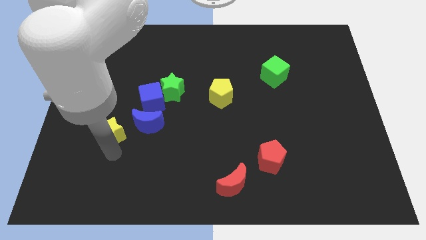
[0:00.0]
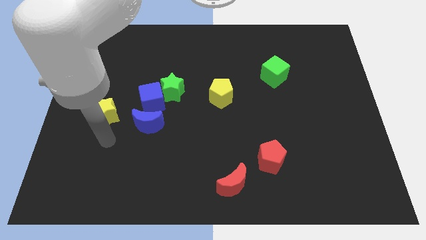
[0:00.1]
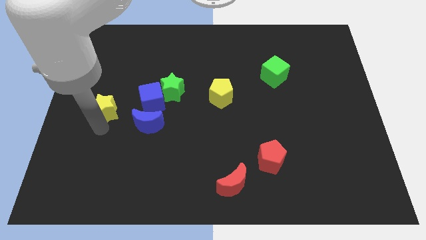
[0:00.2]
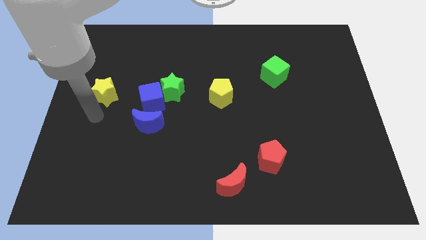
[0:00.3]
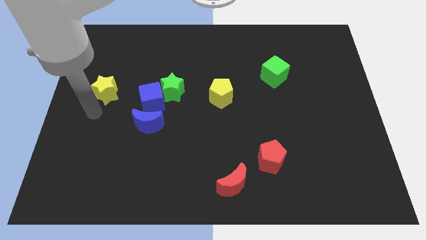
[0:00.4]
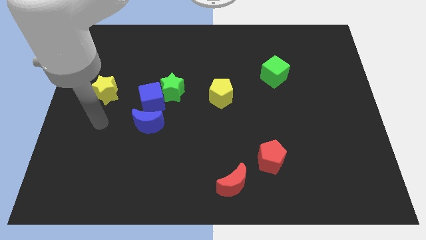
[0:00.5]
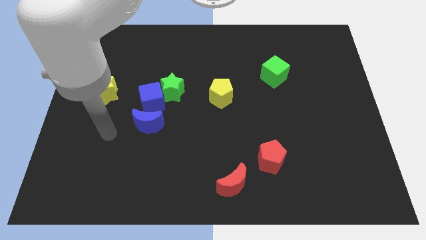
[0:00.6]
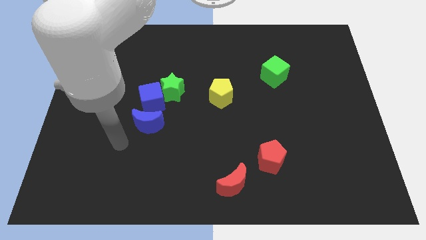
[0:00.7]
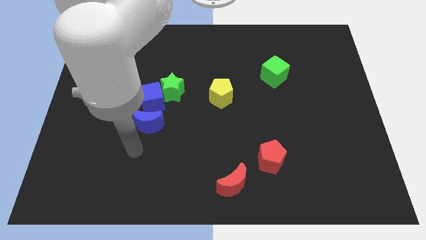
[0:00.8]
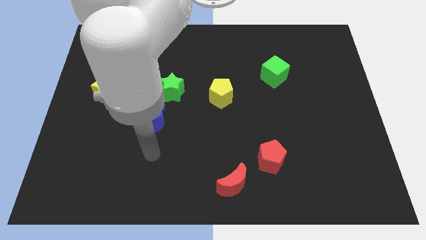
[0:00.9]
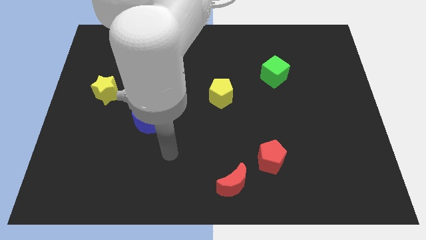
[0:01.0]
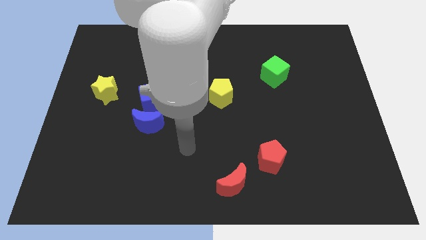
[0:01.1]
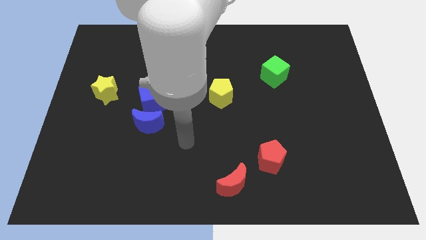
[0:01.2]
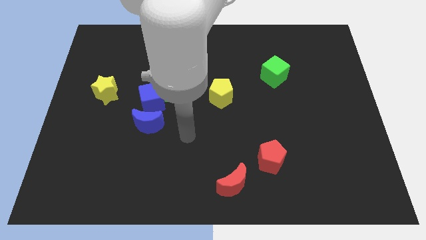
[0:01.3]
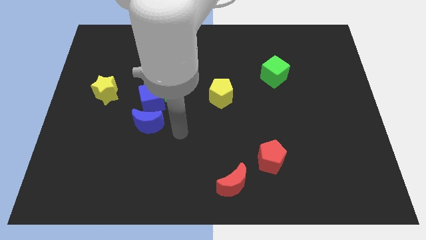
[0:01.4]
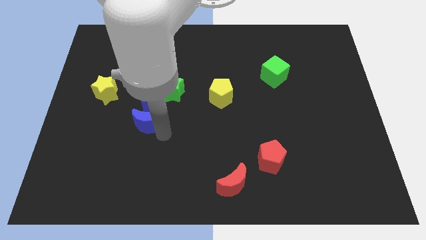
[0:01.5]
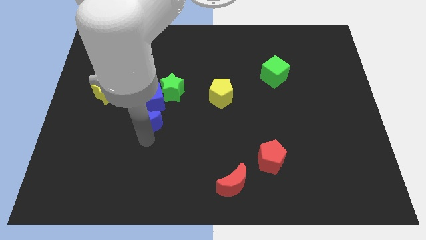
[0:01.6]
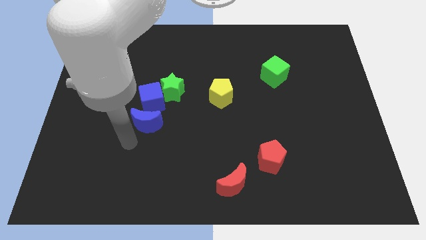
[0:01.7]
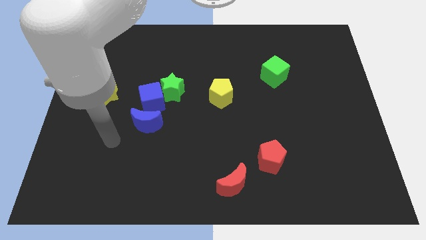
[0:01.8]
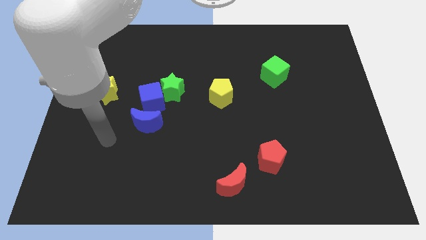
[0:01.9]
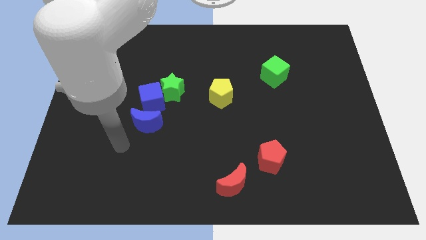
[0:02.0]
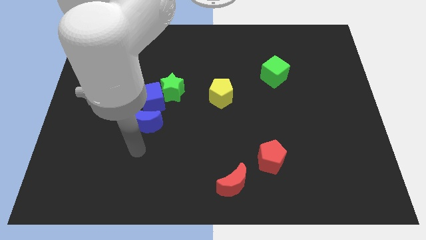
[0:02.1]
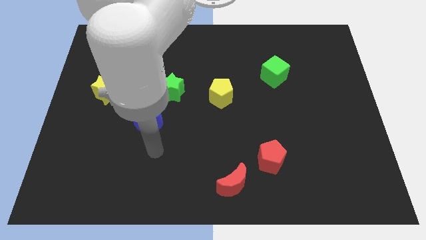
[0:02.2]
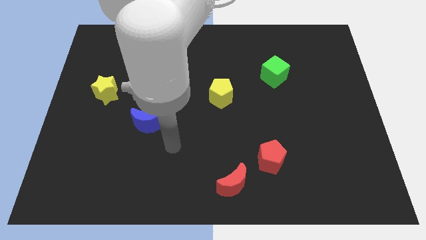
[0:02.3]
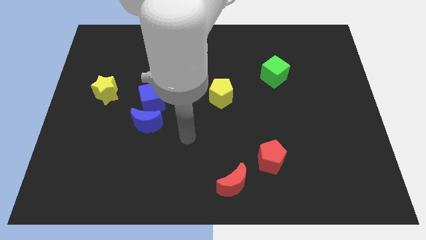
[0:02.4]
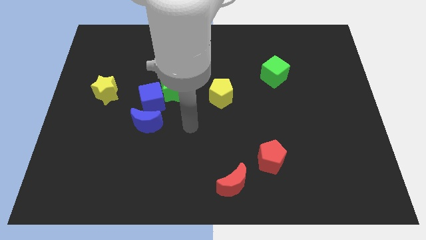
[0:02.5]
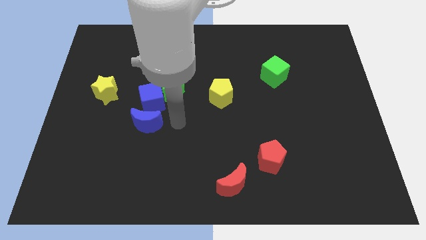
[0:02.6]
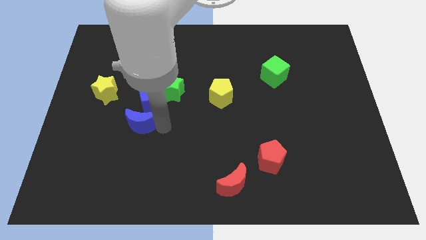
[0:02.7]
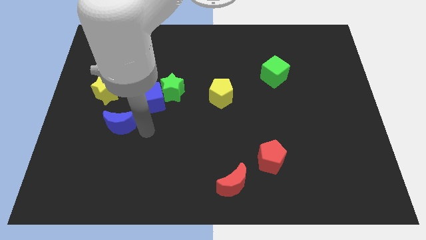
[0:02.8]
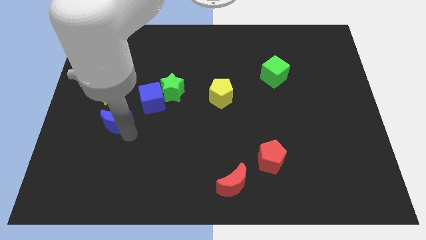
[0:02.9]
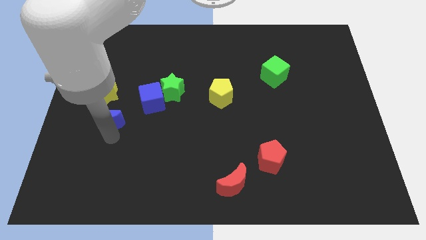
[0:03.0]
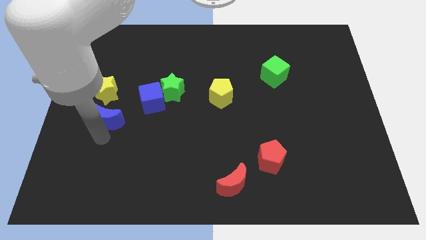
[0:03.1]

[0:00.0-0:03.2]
drag the blue moon diagonally bottom left to the blue cube

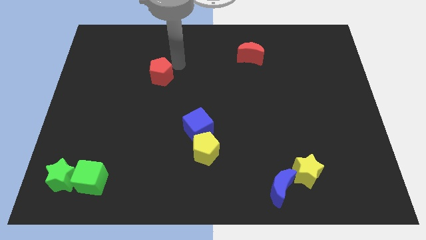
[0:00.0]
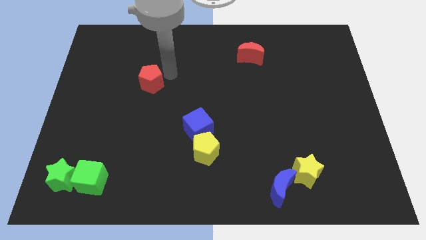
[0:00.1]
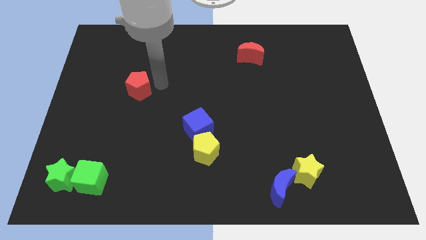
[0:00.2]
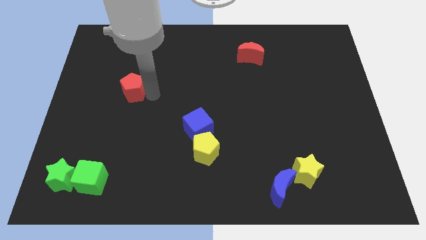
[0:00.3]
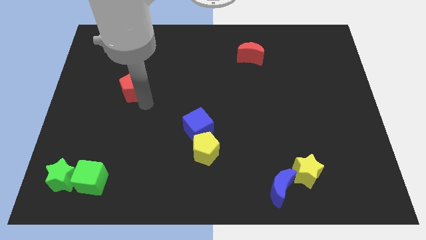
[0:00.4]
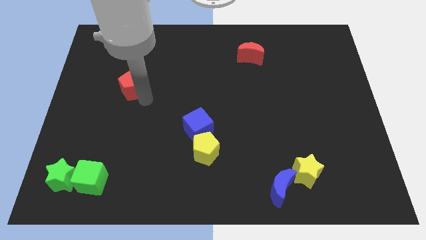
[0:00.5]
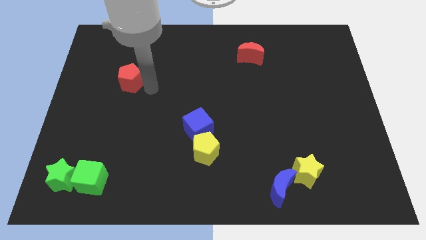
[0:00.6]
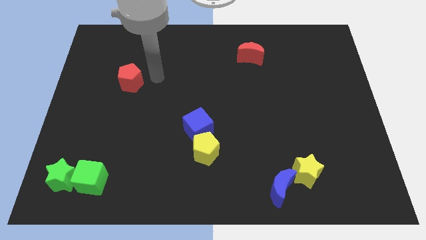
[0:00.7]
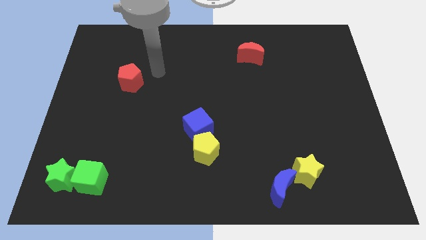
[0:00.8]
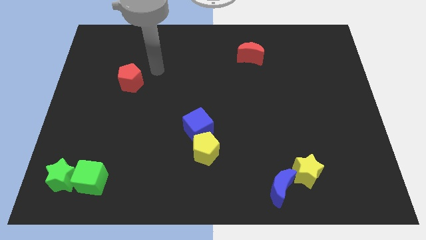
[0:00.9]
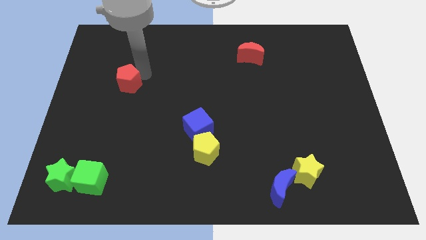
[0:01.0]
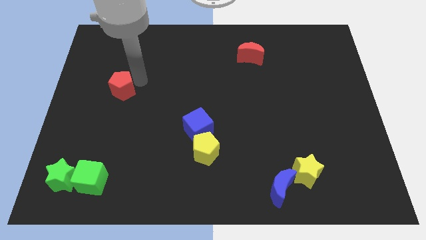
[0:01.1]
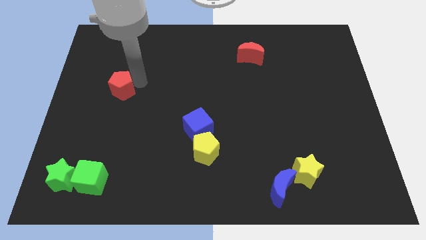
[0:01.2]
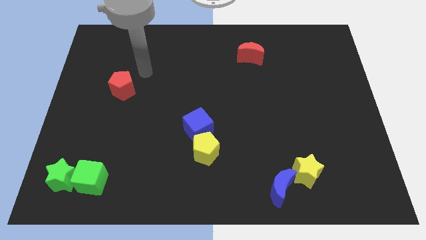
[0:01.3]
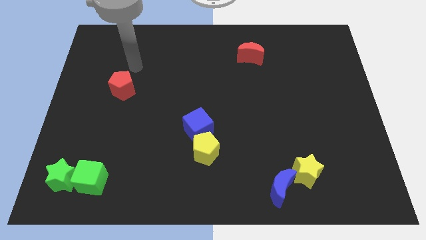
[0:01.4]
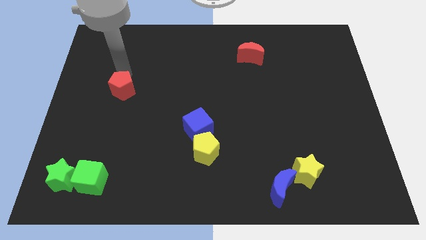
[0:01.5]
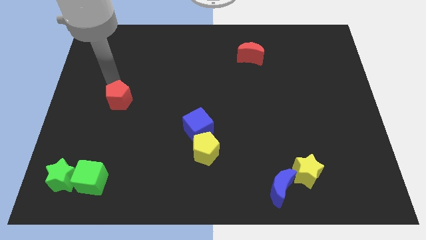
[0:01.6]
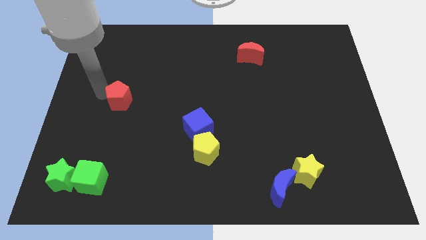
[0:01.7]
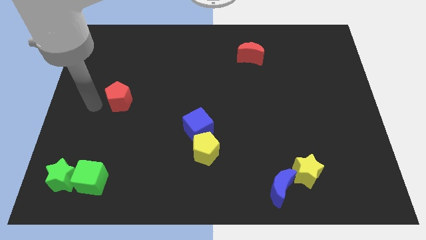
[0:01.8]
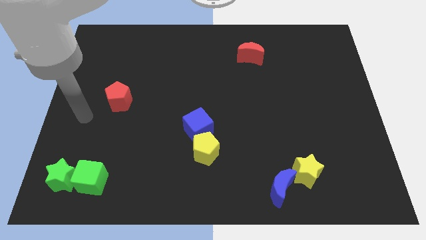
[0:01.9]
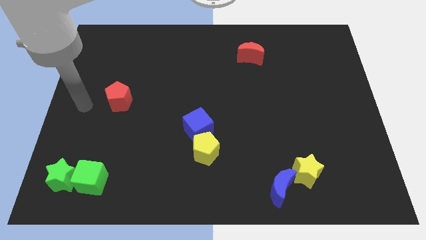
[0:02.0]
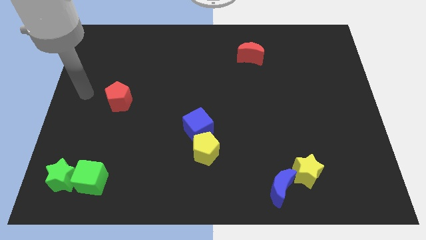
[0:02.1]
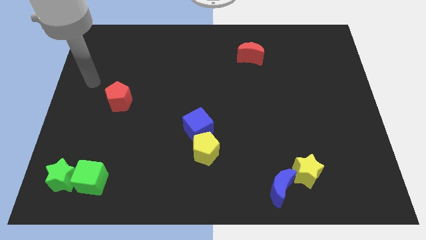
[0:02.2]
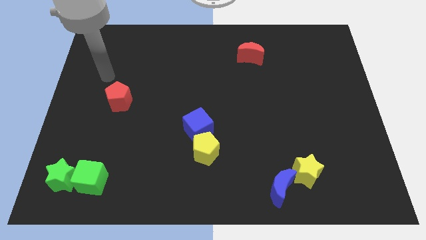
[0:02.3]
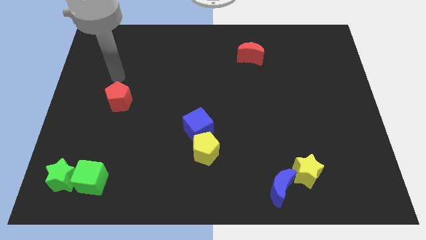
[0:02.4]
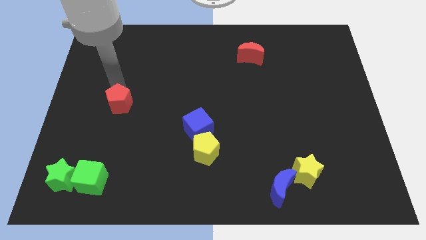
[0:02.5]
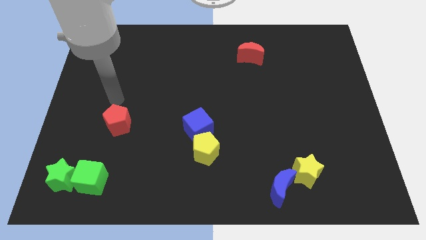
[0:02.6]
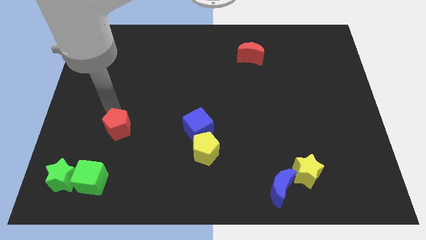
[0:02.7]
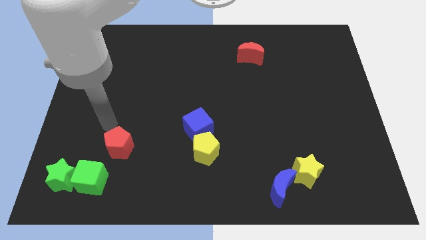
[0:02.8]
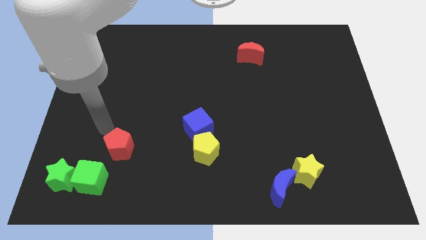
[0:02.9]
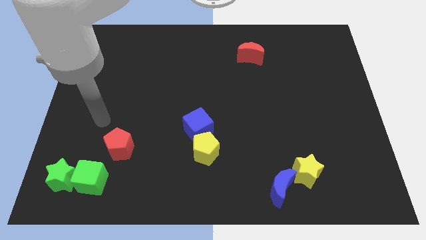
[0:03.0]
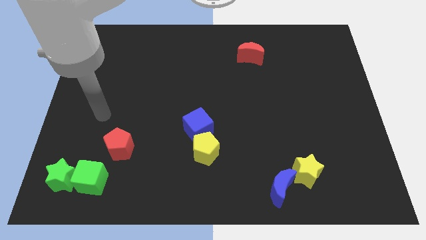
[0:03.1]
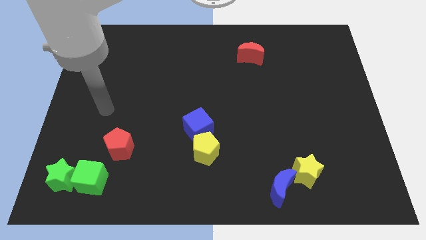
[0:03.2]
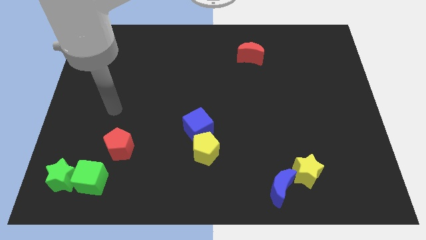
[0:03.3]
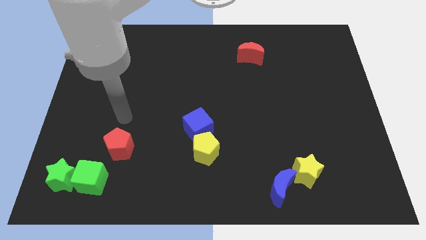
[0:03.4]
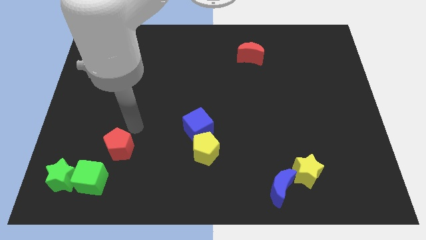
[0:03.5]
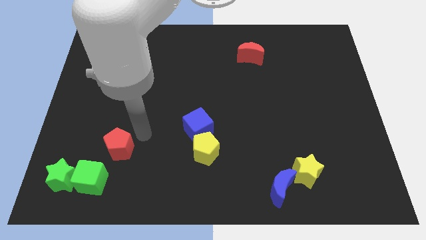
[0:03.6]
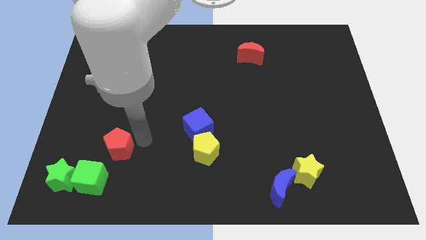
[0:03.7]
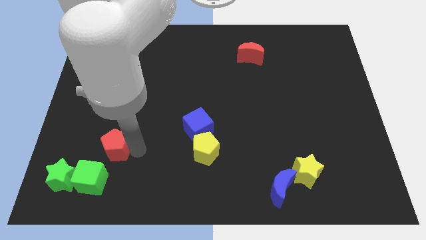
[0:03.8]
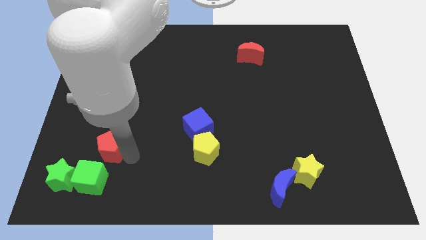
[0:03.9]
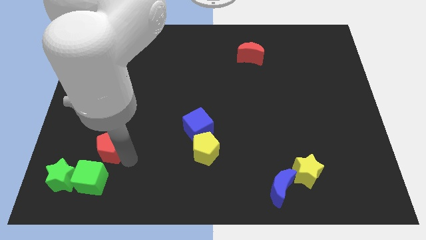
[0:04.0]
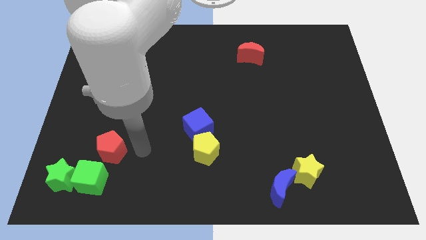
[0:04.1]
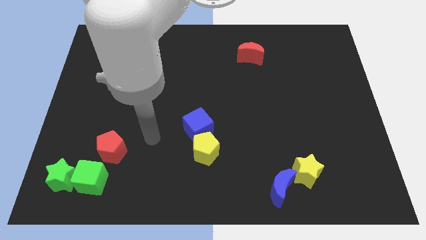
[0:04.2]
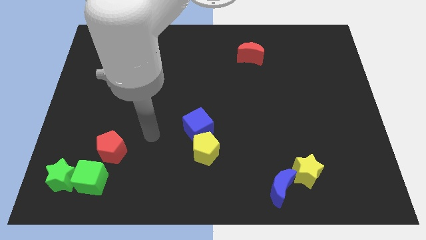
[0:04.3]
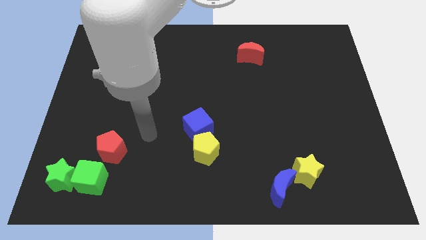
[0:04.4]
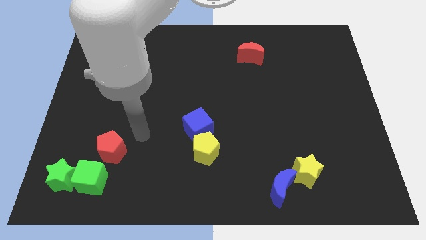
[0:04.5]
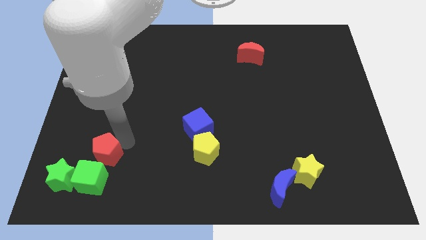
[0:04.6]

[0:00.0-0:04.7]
push the red pentagon towards the green cube

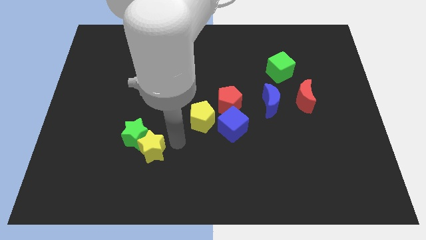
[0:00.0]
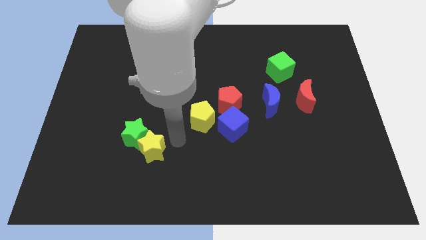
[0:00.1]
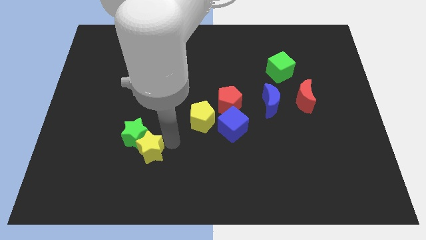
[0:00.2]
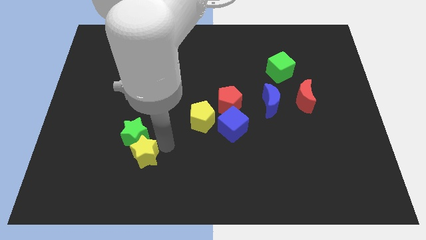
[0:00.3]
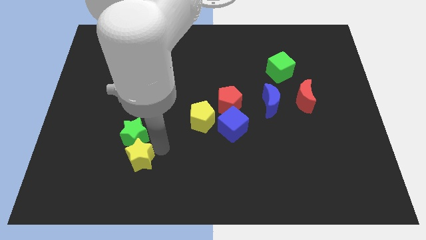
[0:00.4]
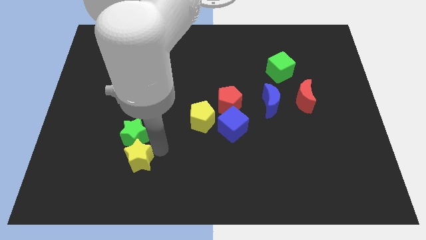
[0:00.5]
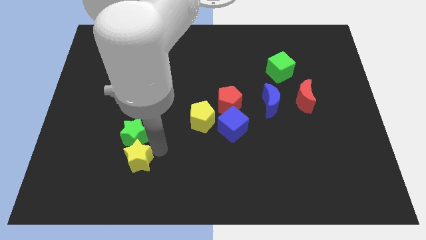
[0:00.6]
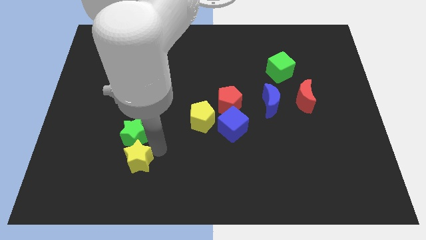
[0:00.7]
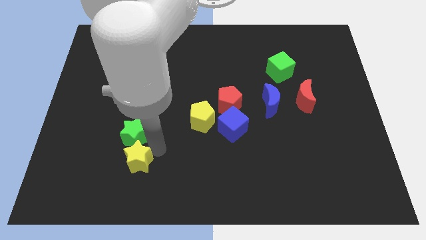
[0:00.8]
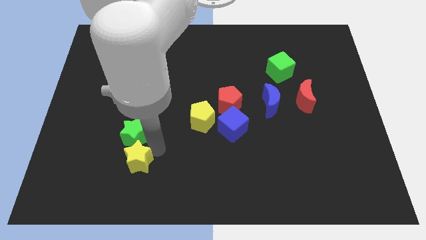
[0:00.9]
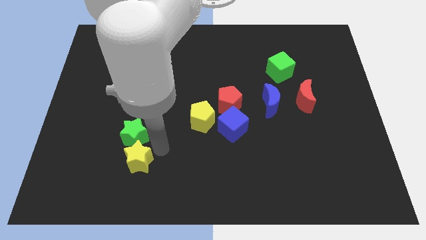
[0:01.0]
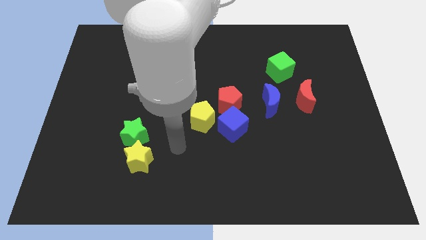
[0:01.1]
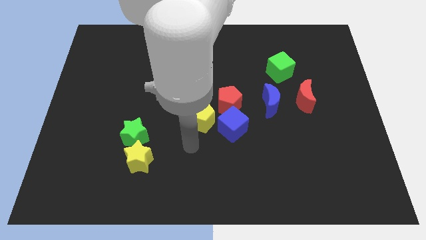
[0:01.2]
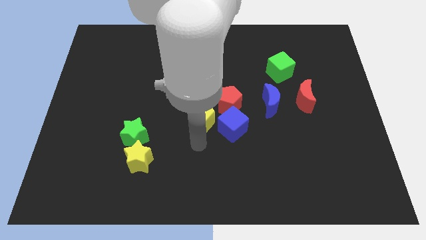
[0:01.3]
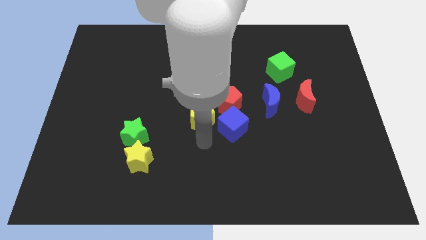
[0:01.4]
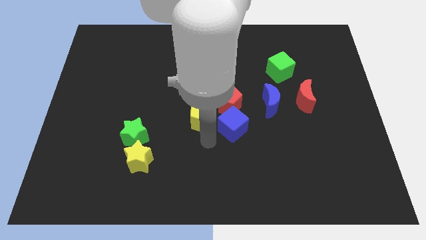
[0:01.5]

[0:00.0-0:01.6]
place the yellow star vertically below the green star
